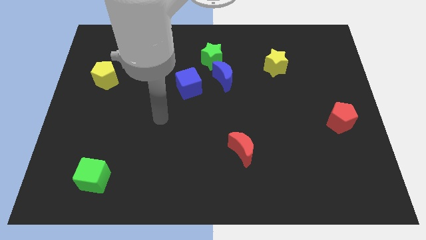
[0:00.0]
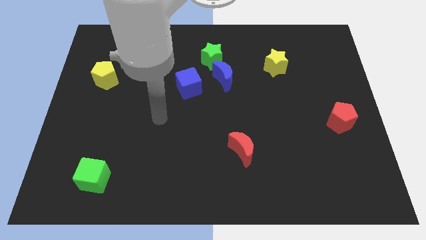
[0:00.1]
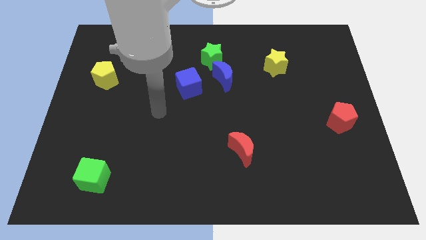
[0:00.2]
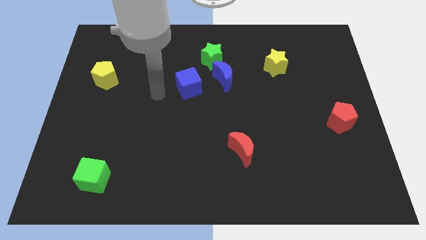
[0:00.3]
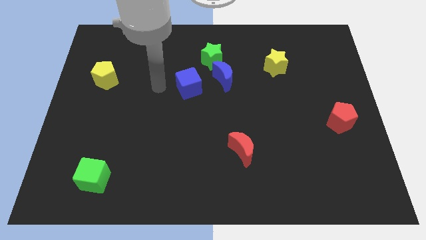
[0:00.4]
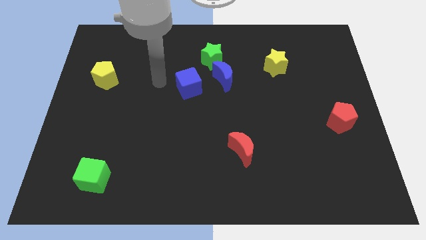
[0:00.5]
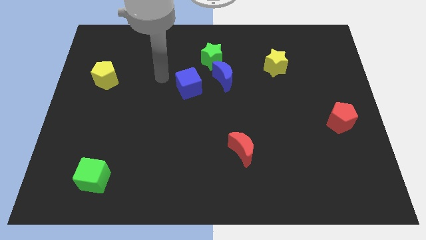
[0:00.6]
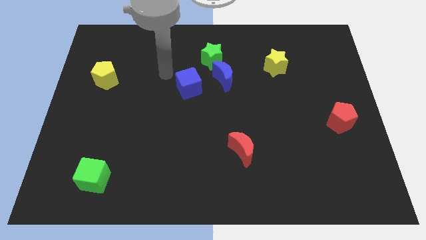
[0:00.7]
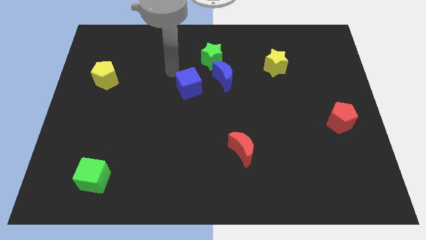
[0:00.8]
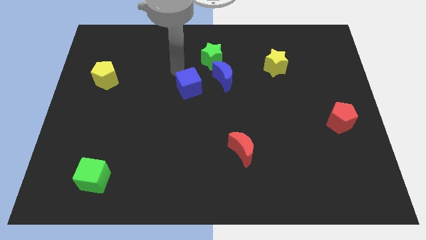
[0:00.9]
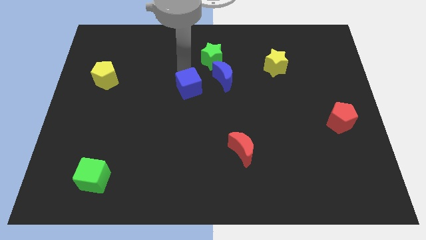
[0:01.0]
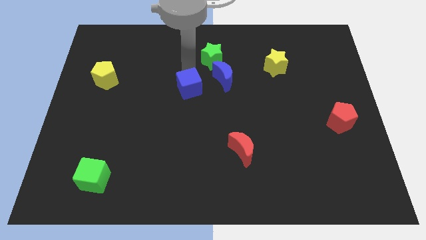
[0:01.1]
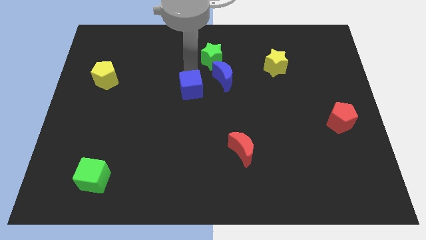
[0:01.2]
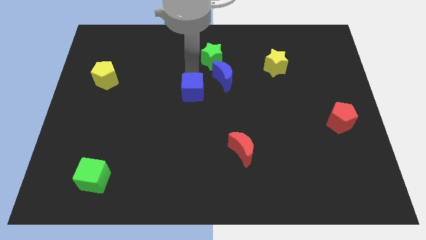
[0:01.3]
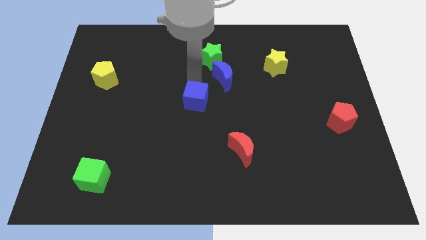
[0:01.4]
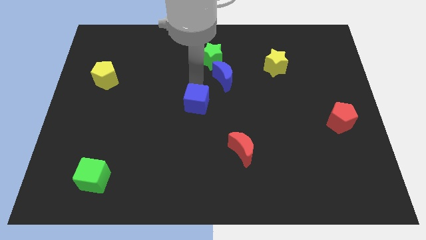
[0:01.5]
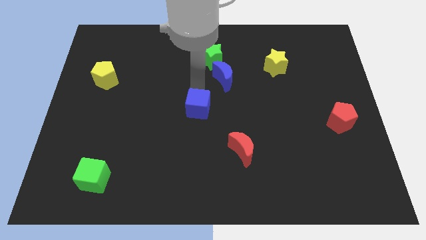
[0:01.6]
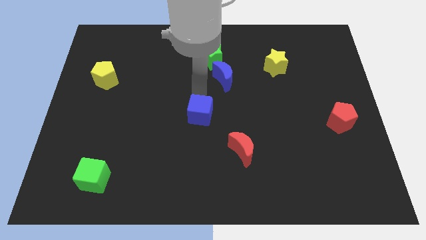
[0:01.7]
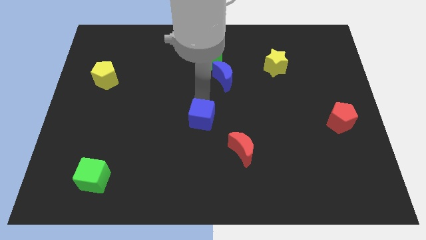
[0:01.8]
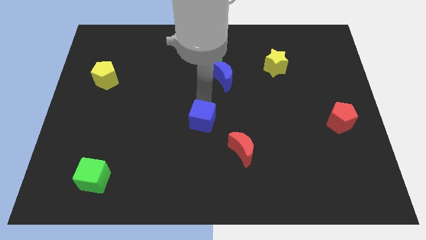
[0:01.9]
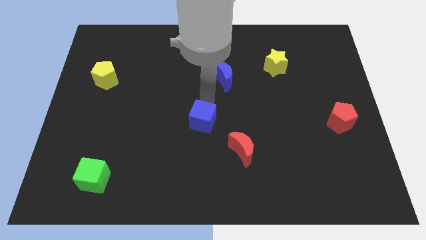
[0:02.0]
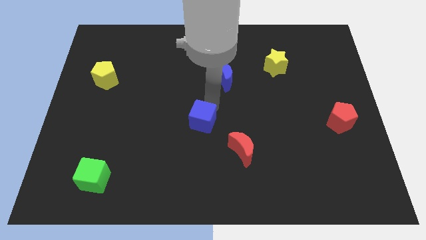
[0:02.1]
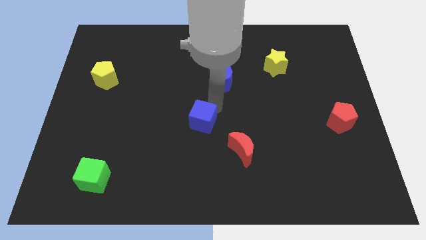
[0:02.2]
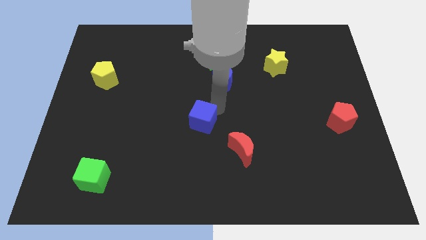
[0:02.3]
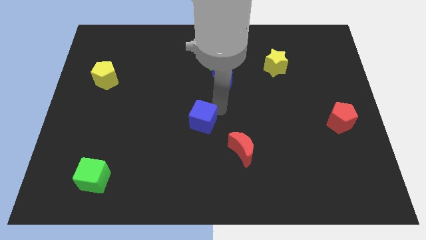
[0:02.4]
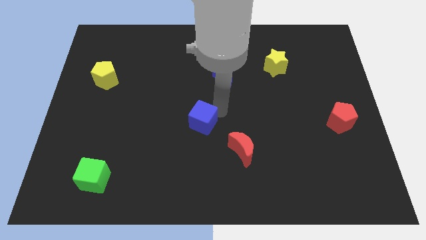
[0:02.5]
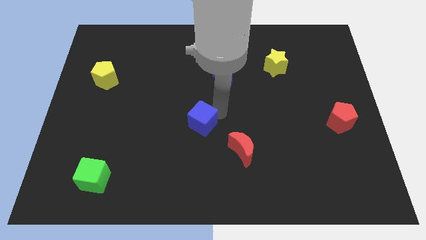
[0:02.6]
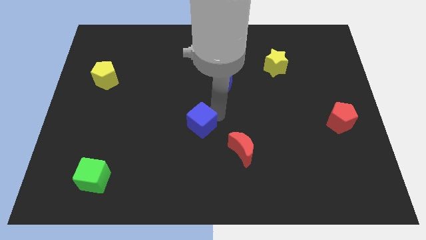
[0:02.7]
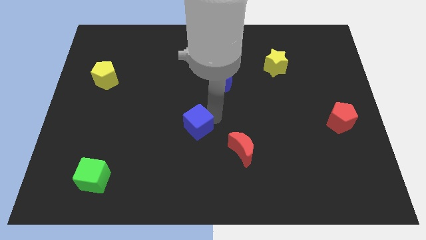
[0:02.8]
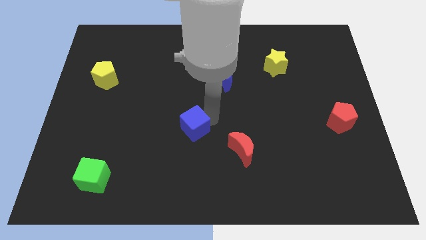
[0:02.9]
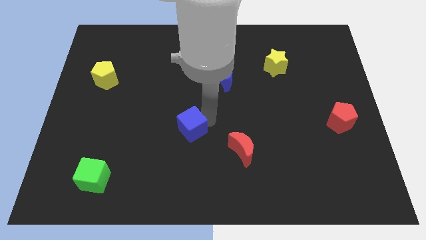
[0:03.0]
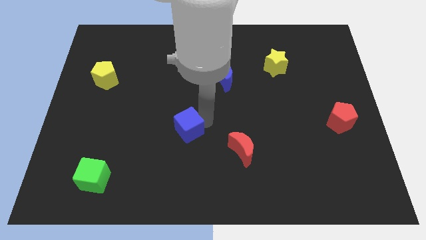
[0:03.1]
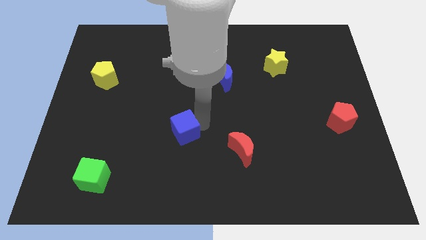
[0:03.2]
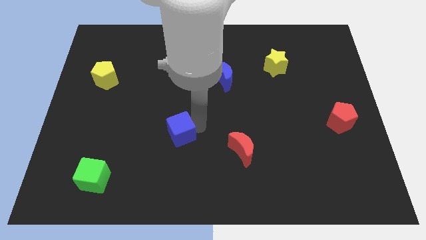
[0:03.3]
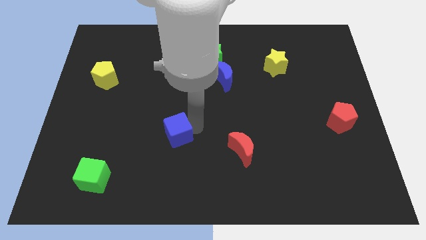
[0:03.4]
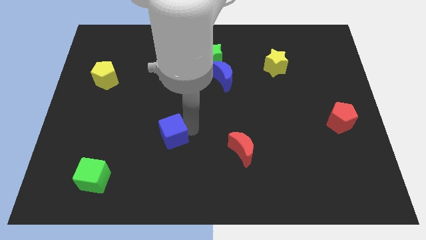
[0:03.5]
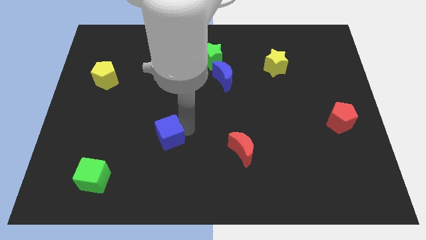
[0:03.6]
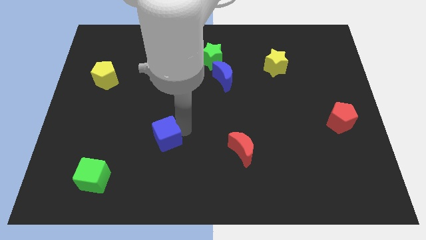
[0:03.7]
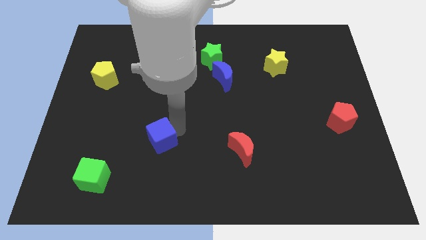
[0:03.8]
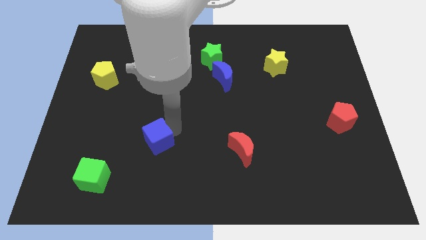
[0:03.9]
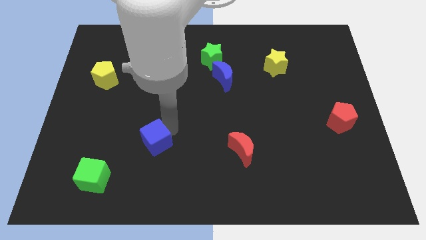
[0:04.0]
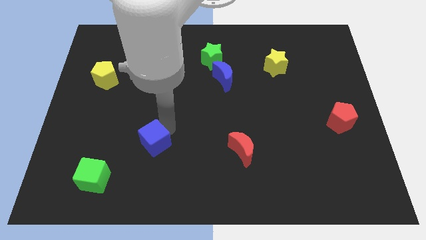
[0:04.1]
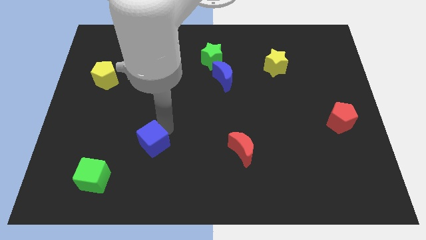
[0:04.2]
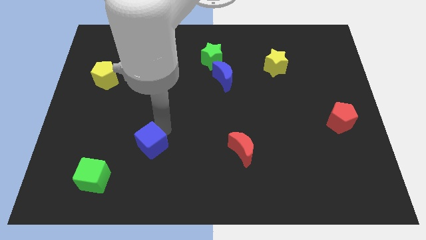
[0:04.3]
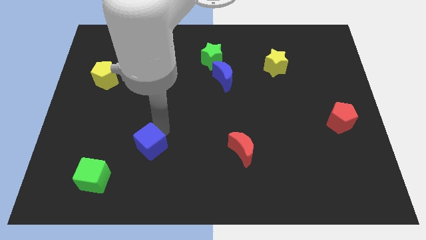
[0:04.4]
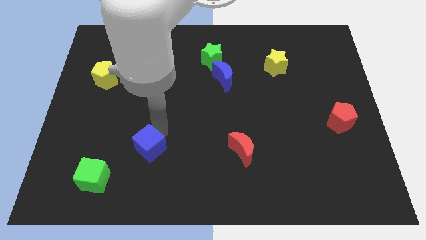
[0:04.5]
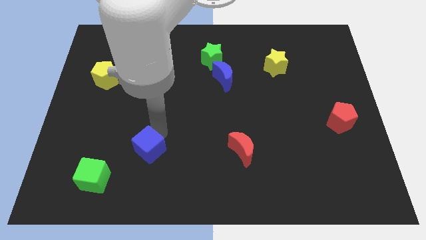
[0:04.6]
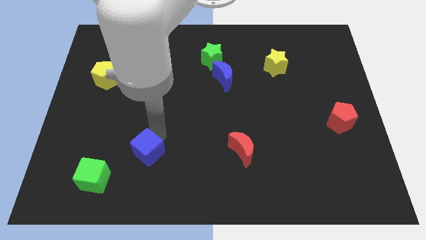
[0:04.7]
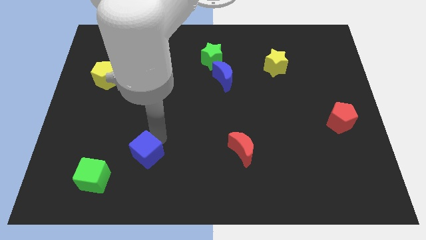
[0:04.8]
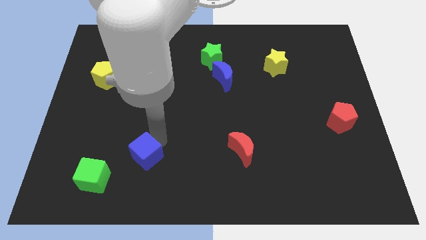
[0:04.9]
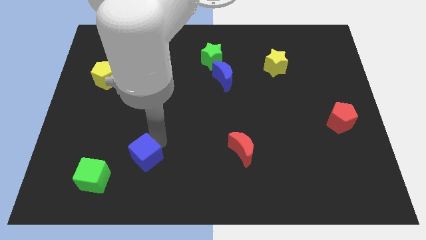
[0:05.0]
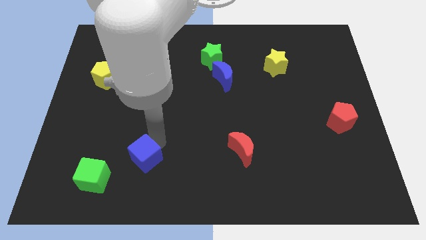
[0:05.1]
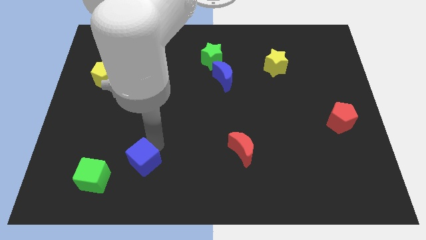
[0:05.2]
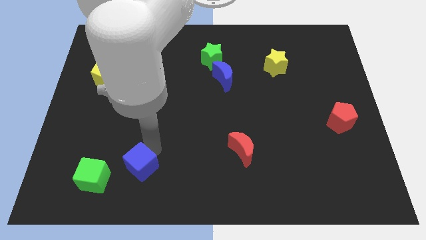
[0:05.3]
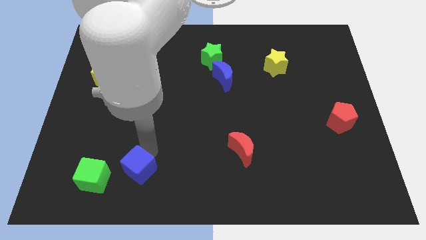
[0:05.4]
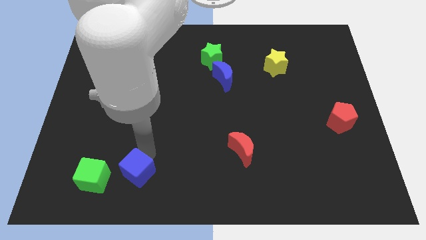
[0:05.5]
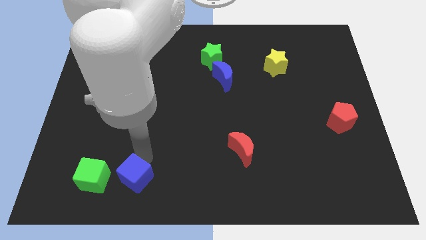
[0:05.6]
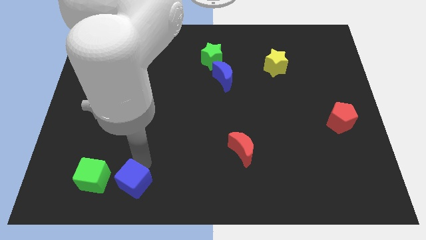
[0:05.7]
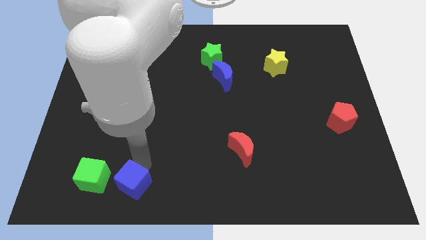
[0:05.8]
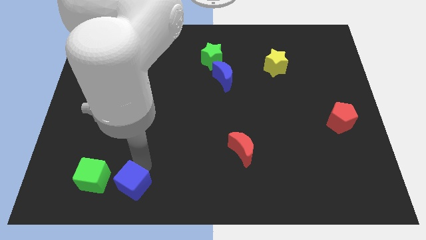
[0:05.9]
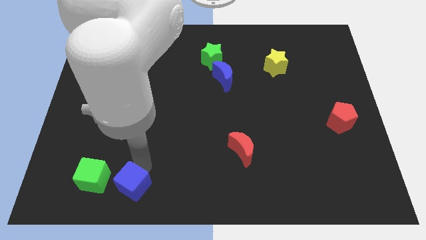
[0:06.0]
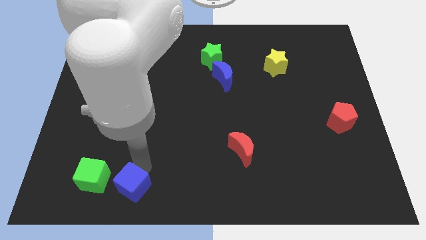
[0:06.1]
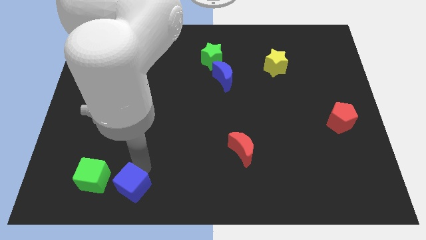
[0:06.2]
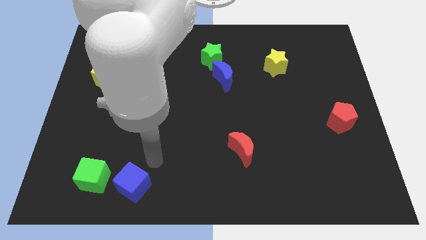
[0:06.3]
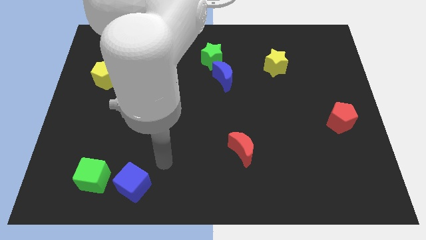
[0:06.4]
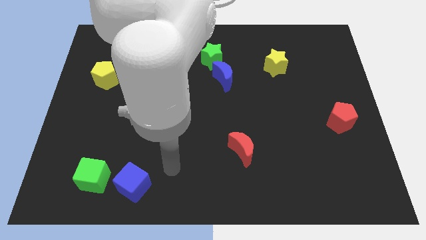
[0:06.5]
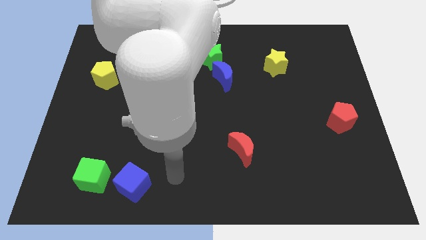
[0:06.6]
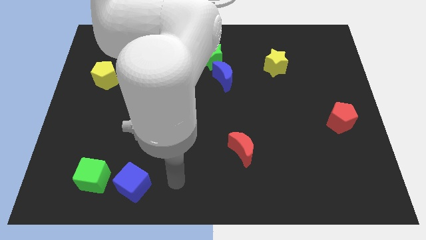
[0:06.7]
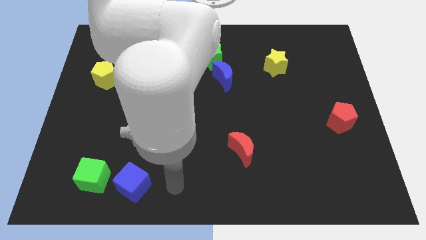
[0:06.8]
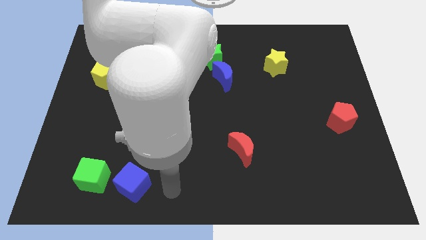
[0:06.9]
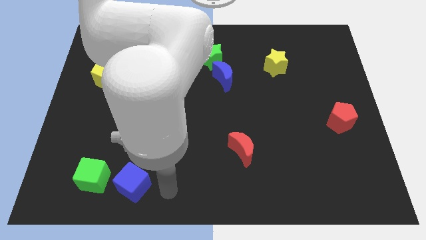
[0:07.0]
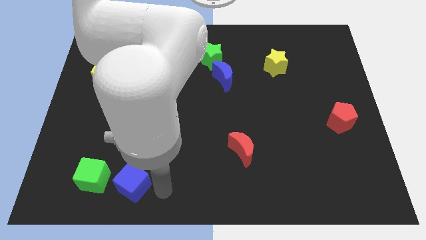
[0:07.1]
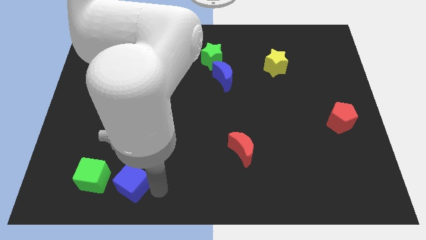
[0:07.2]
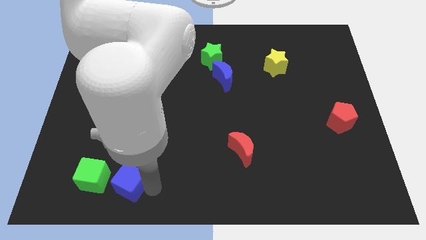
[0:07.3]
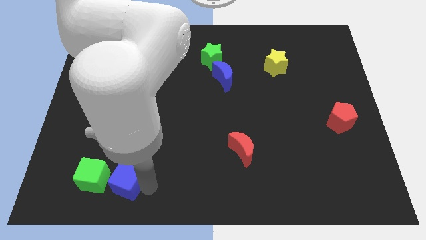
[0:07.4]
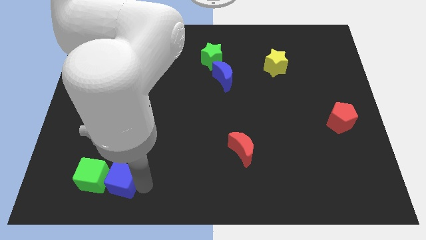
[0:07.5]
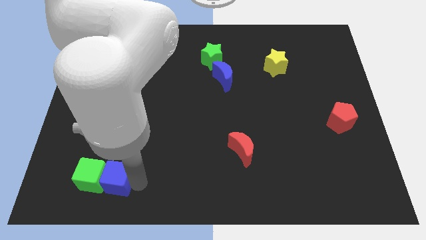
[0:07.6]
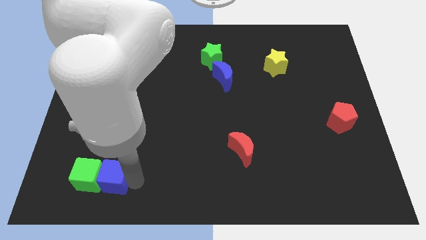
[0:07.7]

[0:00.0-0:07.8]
put the blue cube towards the green cube

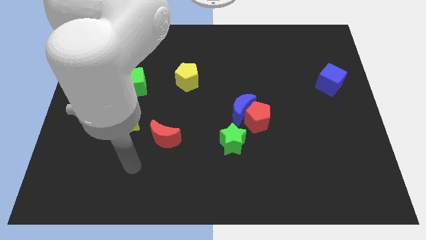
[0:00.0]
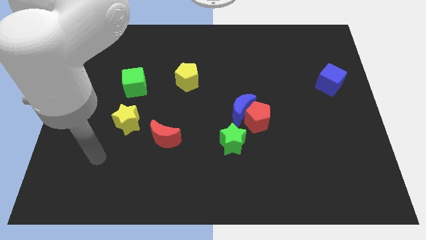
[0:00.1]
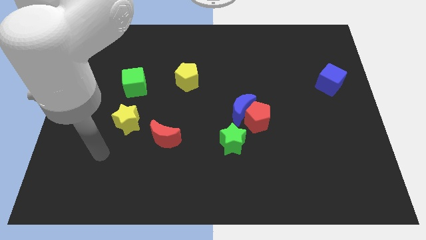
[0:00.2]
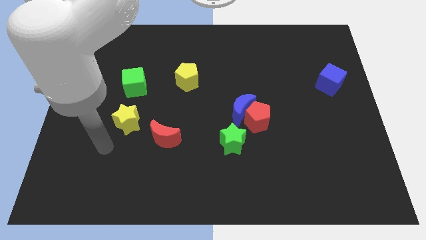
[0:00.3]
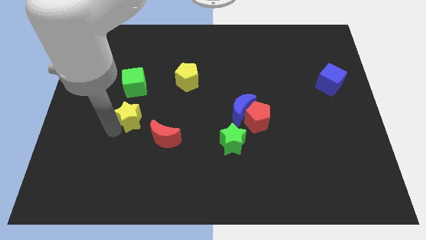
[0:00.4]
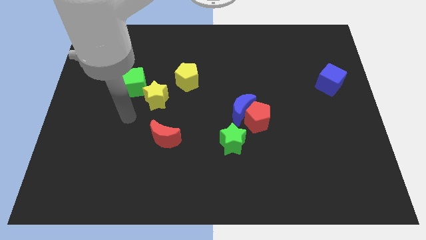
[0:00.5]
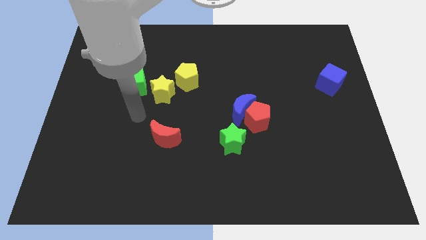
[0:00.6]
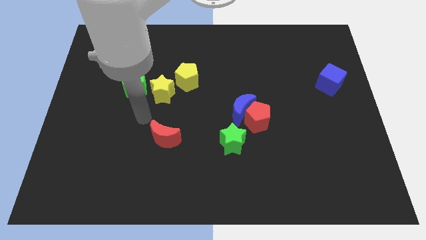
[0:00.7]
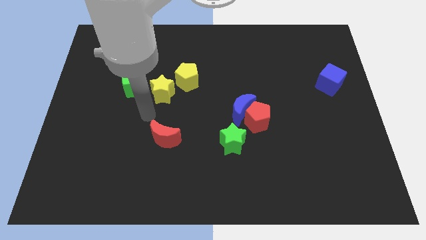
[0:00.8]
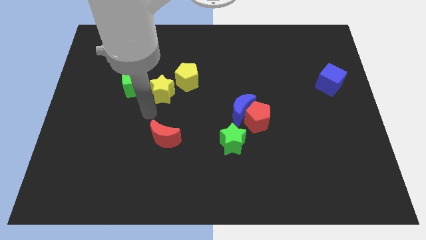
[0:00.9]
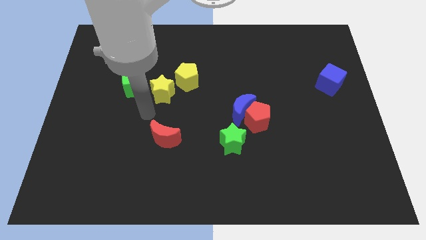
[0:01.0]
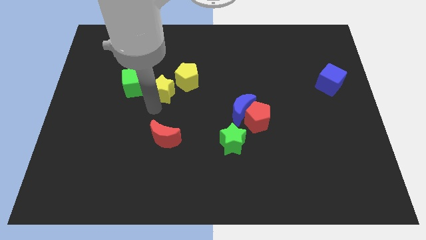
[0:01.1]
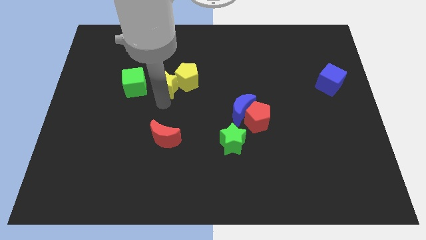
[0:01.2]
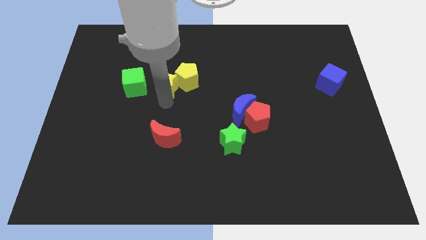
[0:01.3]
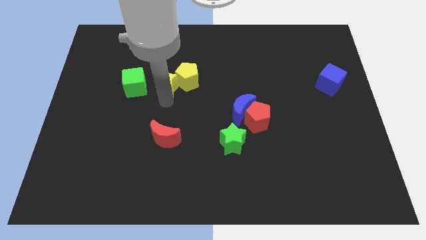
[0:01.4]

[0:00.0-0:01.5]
move the yellow star close to the yellow pentagon
